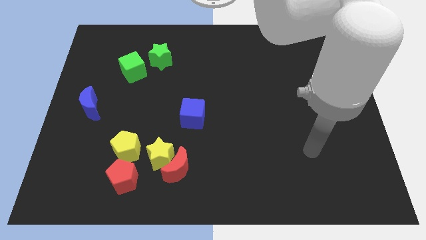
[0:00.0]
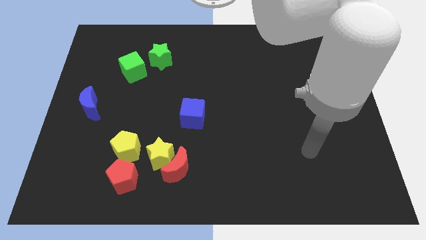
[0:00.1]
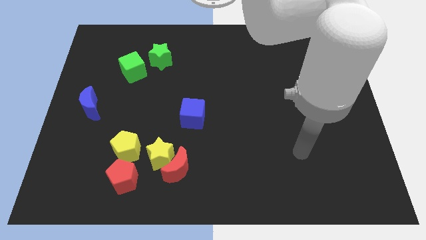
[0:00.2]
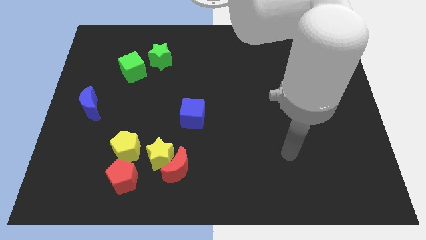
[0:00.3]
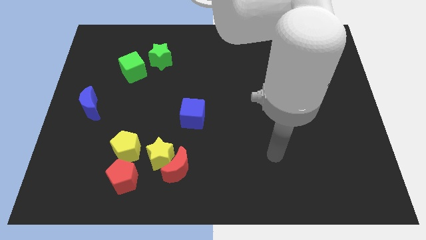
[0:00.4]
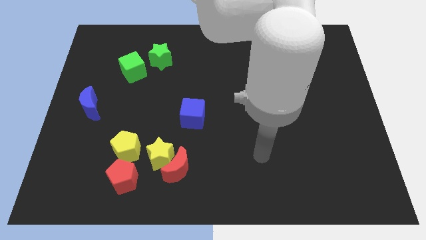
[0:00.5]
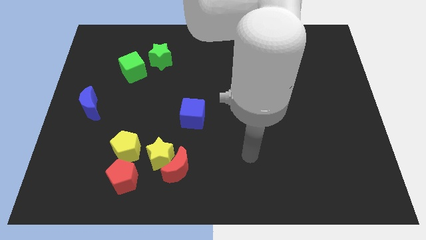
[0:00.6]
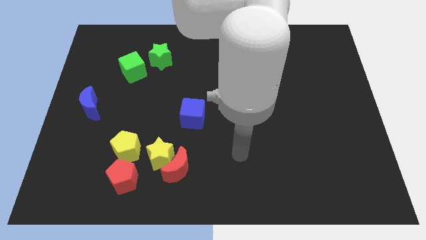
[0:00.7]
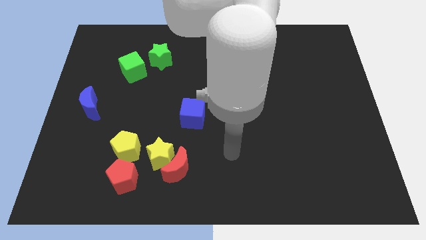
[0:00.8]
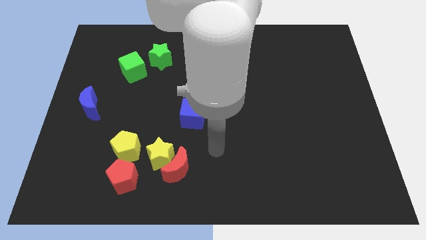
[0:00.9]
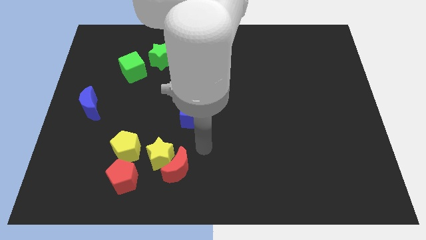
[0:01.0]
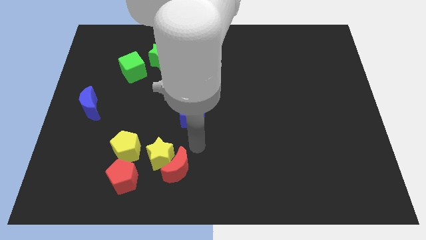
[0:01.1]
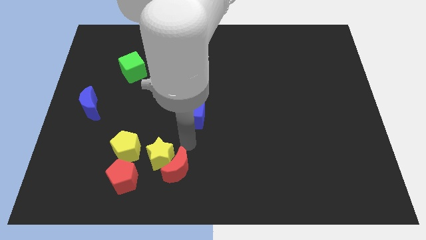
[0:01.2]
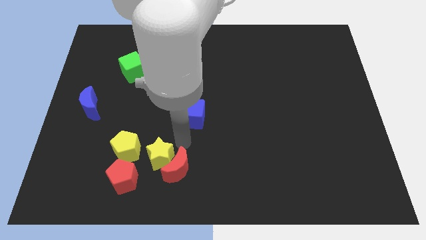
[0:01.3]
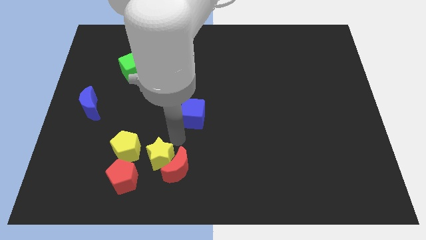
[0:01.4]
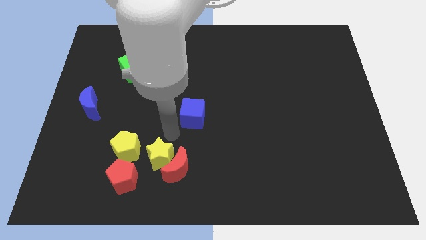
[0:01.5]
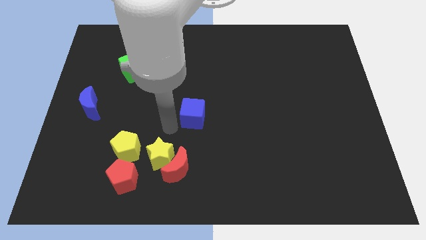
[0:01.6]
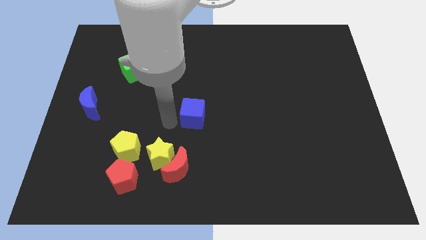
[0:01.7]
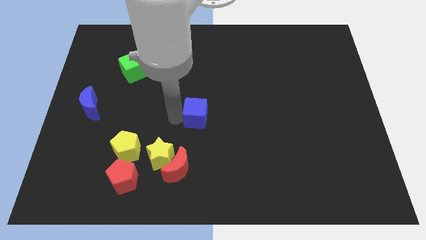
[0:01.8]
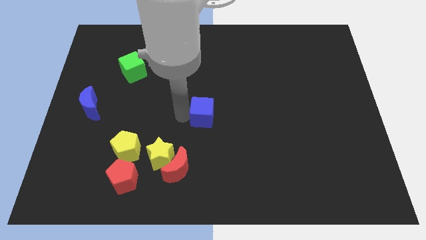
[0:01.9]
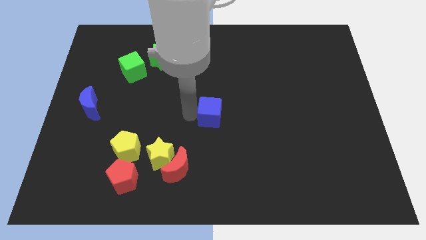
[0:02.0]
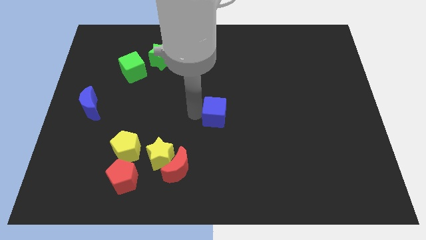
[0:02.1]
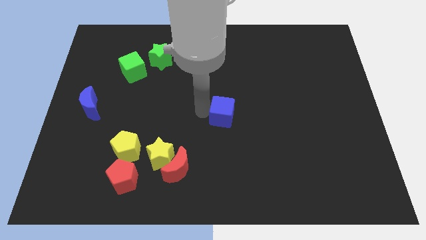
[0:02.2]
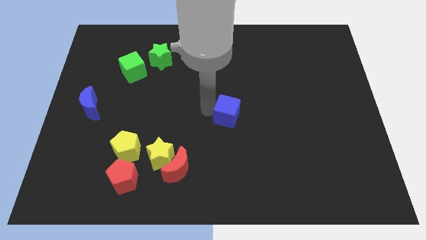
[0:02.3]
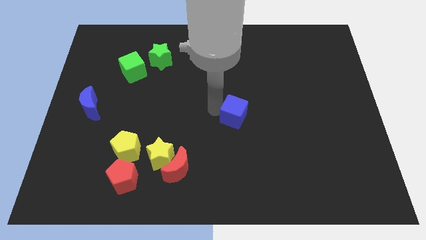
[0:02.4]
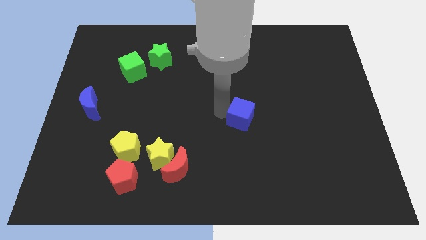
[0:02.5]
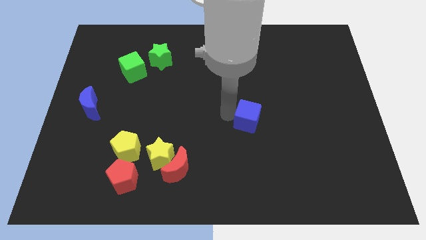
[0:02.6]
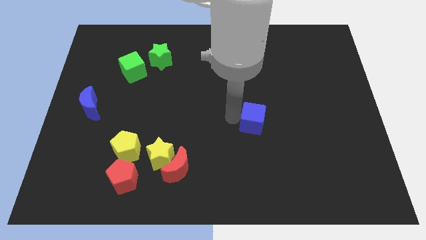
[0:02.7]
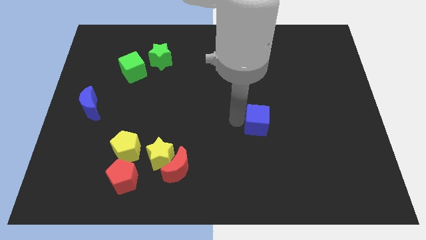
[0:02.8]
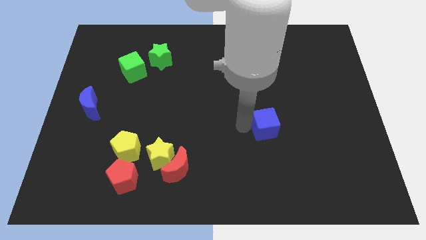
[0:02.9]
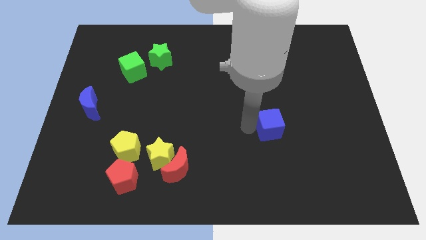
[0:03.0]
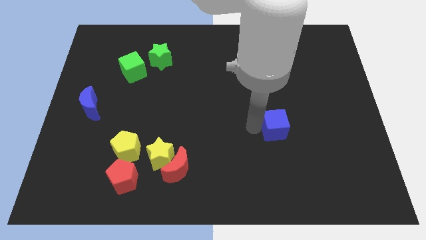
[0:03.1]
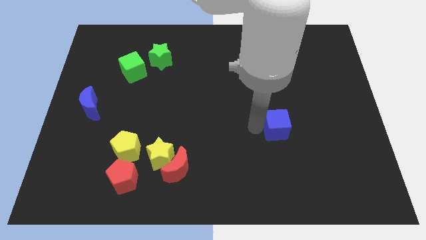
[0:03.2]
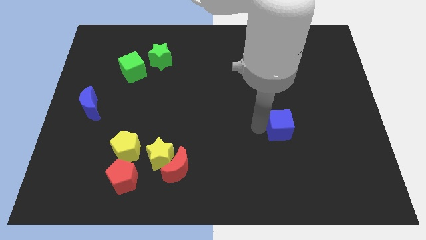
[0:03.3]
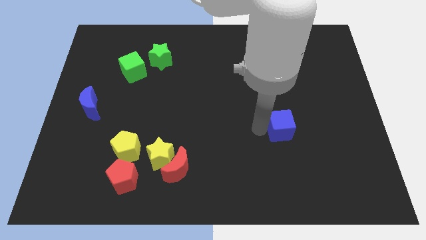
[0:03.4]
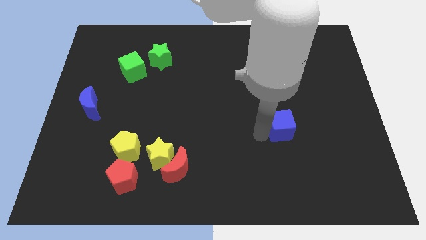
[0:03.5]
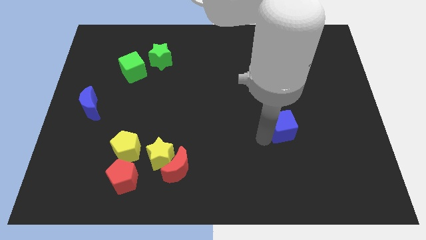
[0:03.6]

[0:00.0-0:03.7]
push the blue cube to the right side of the board

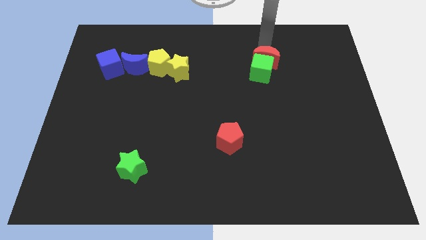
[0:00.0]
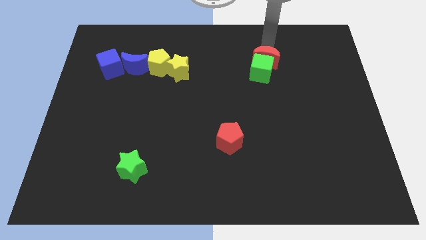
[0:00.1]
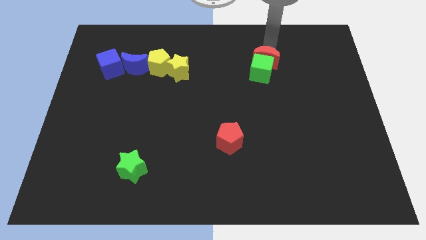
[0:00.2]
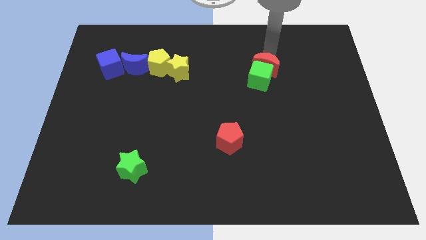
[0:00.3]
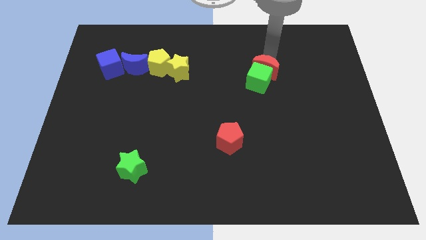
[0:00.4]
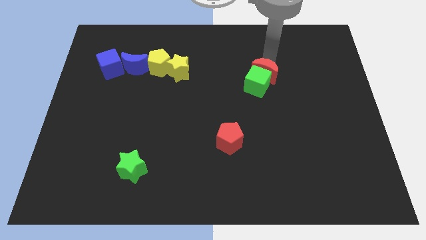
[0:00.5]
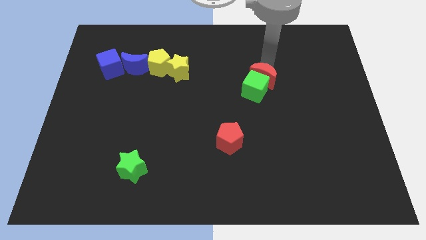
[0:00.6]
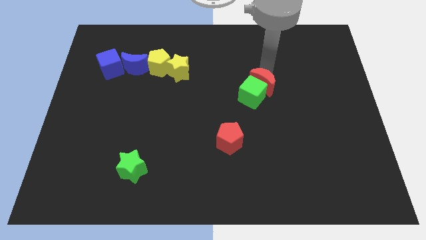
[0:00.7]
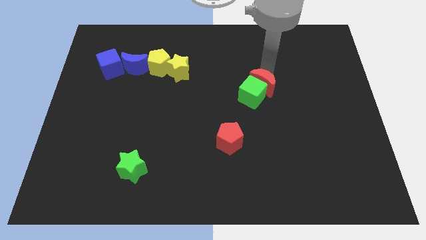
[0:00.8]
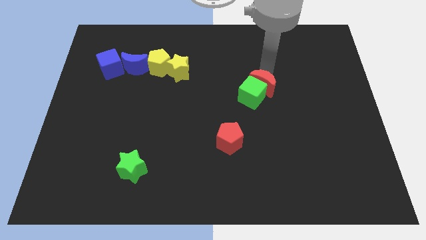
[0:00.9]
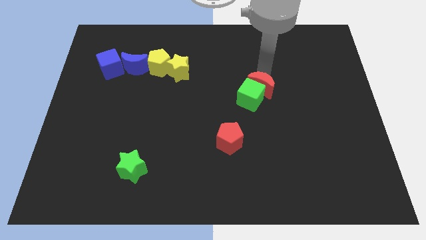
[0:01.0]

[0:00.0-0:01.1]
push the green cube slightly with red crescent

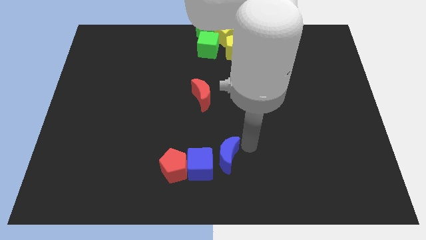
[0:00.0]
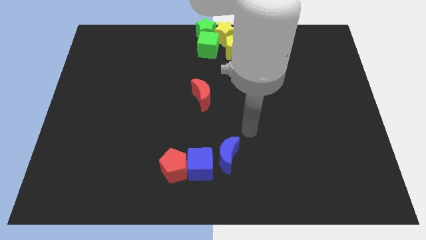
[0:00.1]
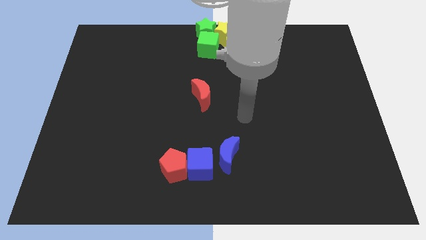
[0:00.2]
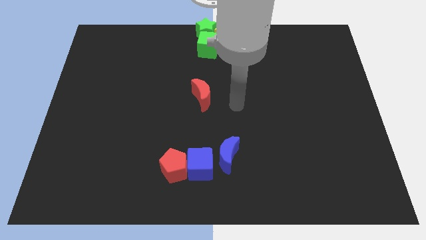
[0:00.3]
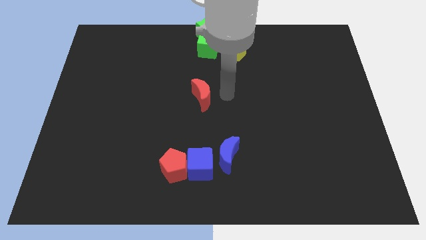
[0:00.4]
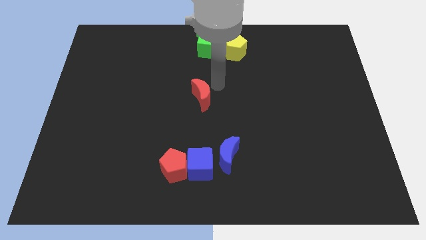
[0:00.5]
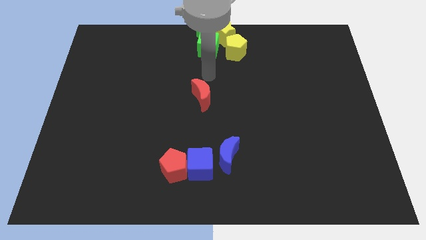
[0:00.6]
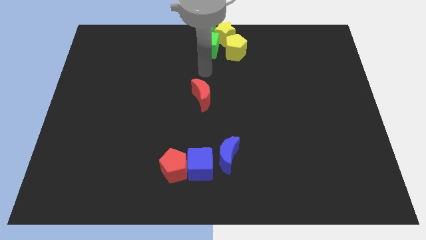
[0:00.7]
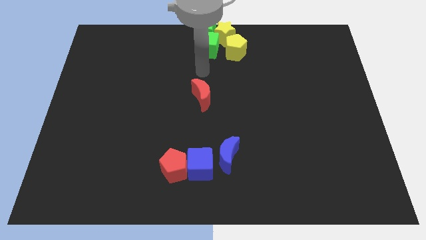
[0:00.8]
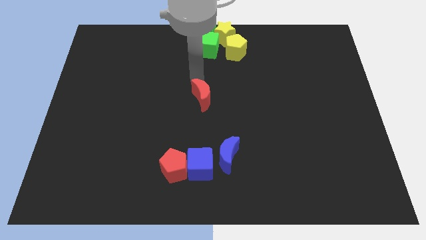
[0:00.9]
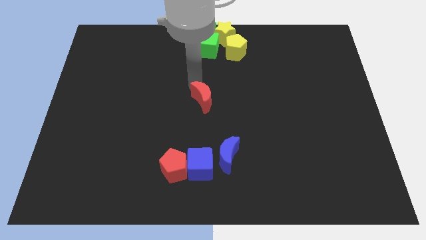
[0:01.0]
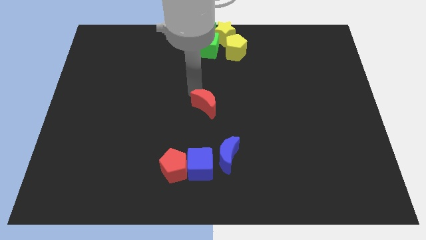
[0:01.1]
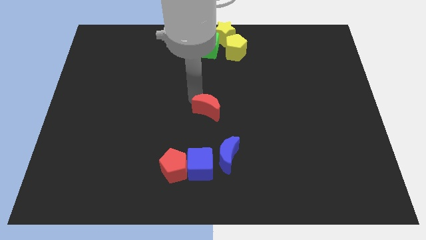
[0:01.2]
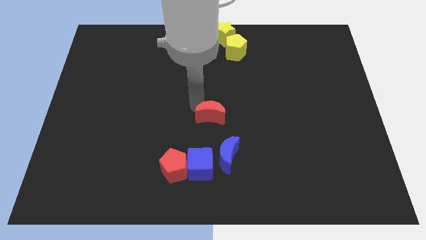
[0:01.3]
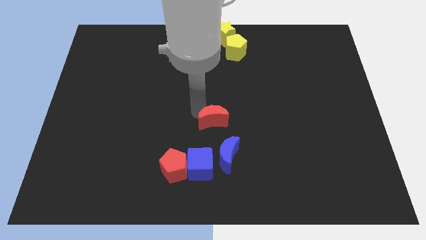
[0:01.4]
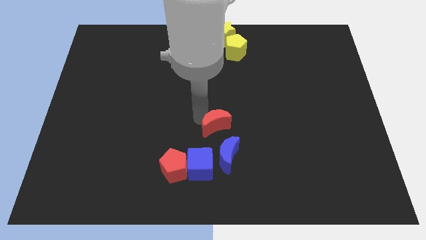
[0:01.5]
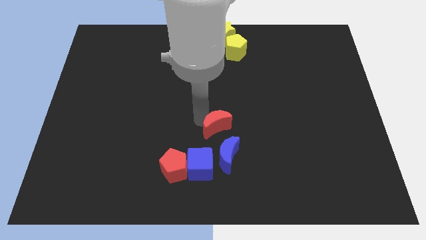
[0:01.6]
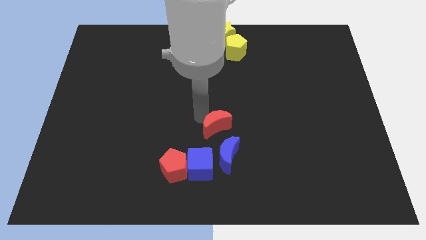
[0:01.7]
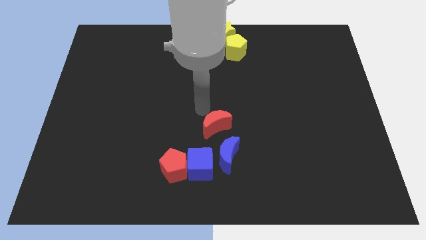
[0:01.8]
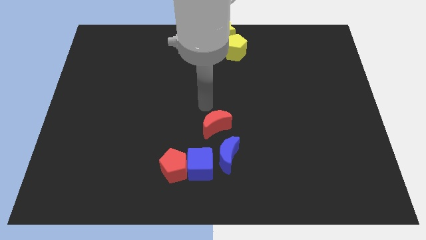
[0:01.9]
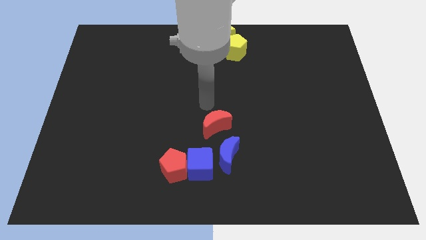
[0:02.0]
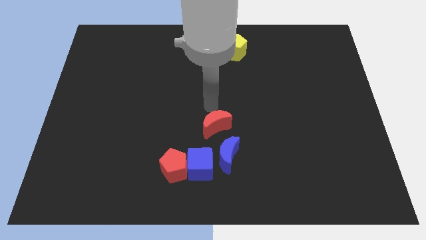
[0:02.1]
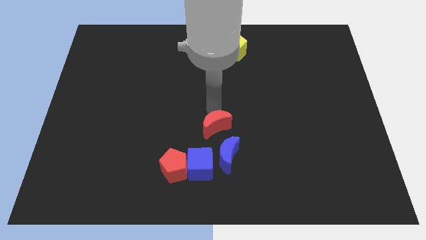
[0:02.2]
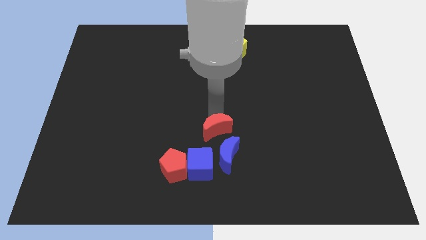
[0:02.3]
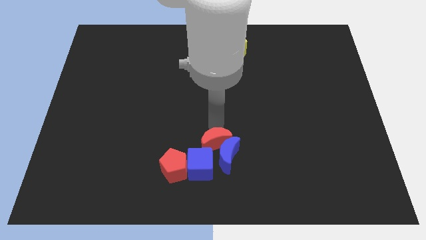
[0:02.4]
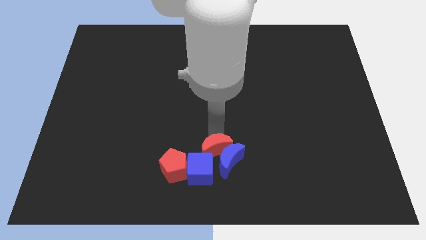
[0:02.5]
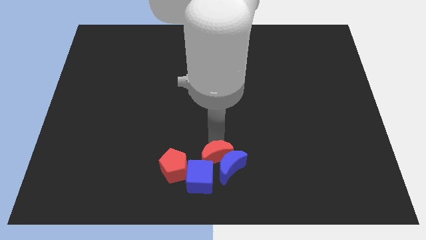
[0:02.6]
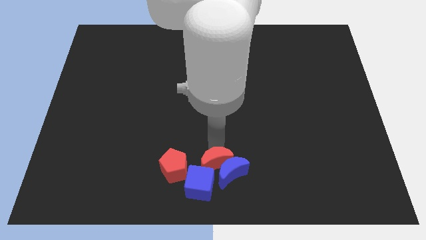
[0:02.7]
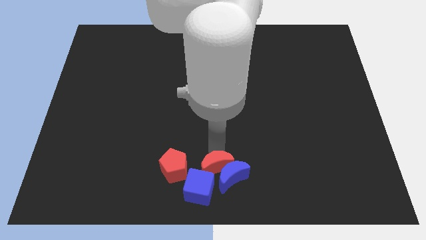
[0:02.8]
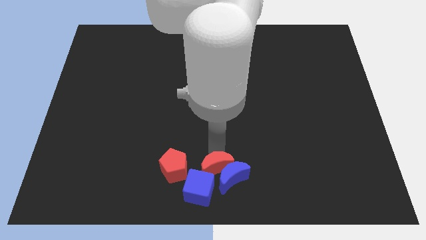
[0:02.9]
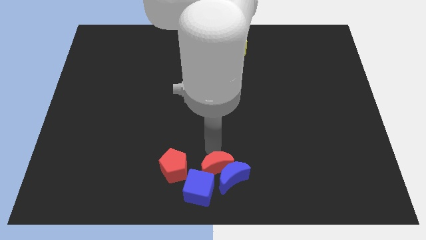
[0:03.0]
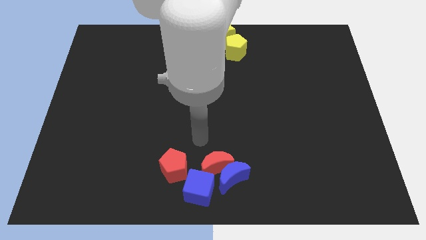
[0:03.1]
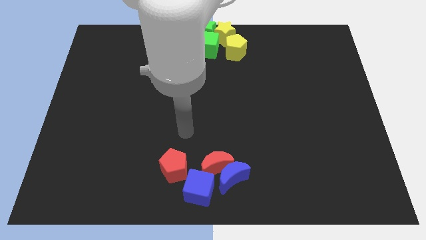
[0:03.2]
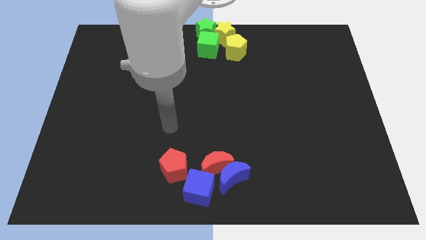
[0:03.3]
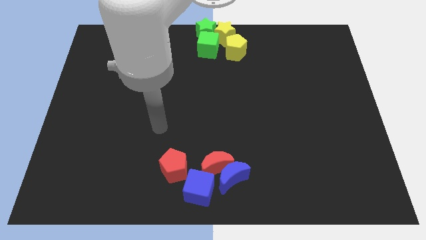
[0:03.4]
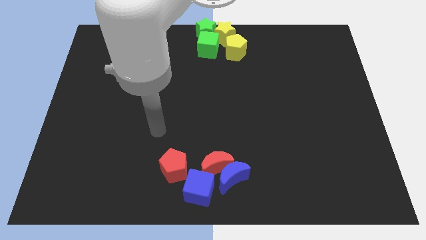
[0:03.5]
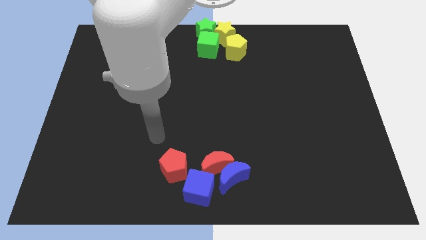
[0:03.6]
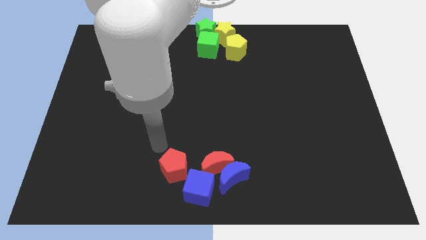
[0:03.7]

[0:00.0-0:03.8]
push the red crescent and blue blocks towards the bottom center of the board

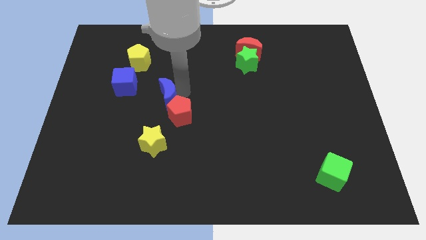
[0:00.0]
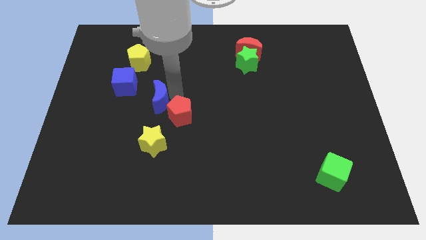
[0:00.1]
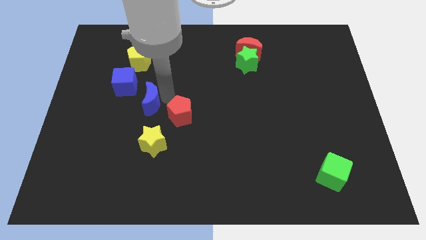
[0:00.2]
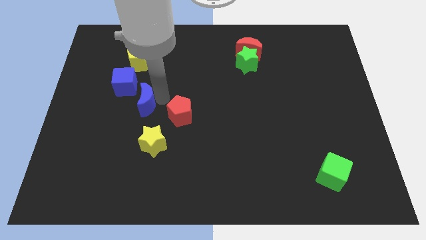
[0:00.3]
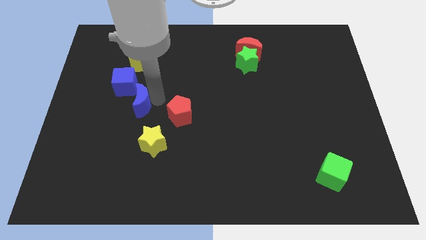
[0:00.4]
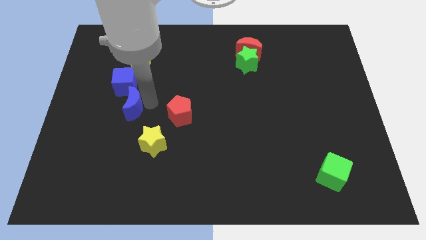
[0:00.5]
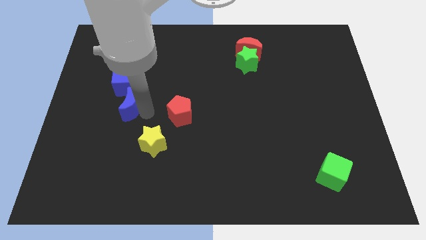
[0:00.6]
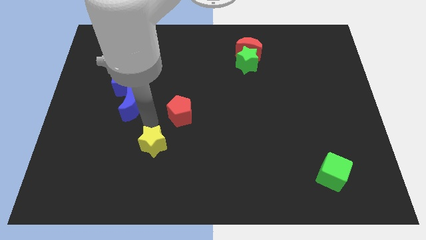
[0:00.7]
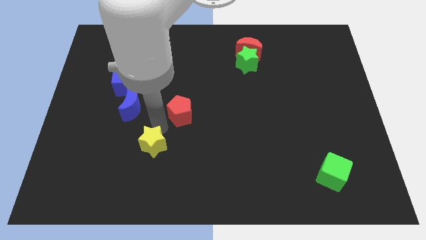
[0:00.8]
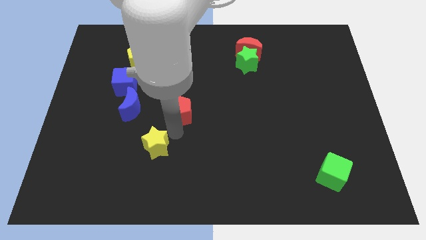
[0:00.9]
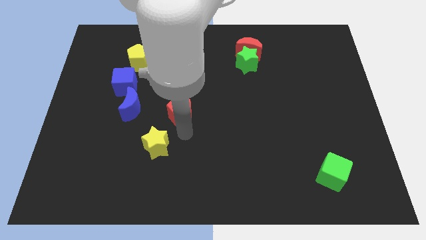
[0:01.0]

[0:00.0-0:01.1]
separate blue moon from red pentagon
